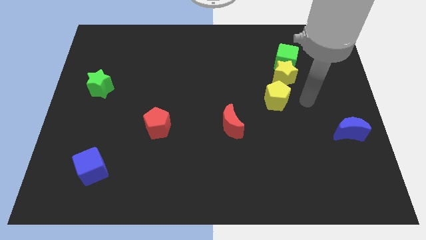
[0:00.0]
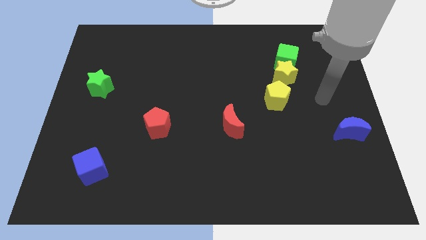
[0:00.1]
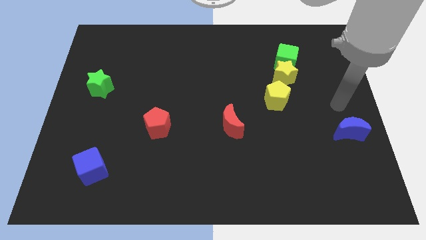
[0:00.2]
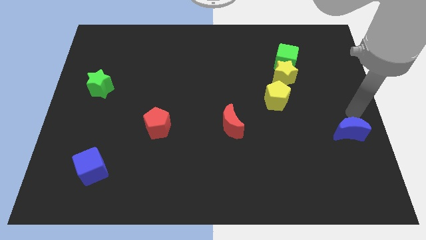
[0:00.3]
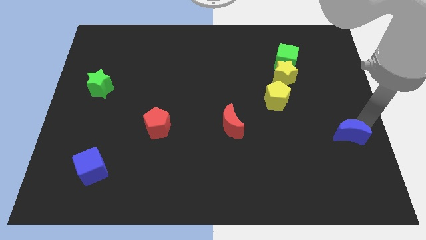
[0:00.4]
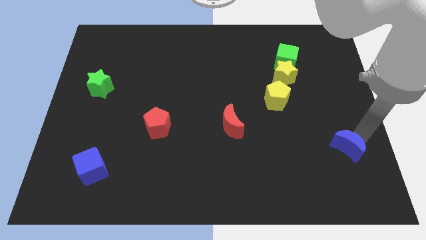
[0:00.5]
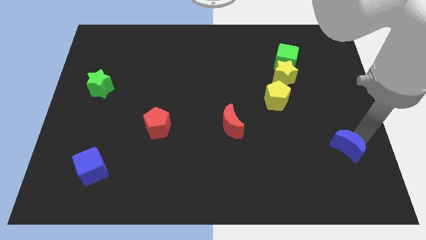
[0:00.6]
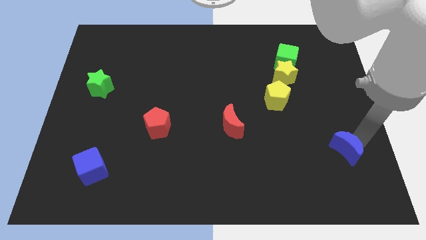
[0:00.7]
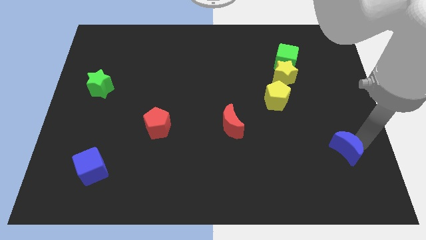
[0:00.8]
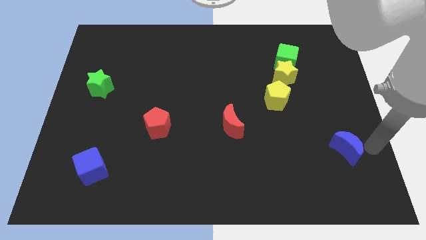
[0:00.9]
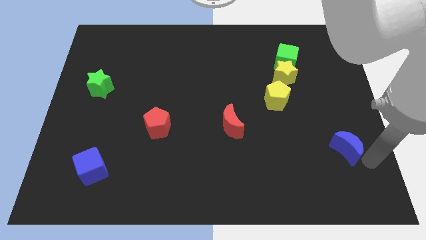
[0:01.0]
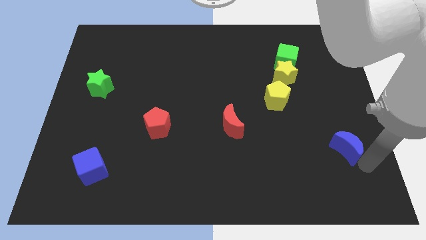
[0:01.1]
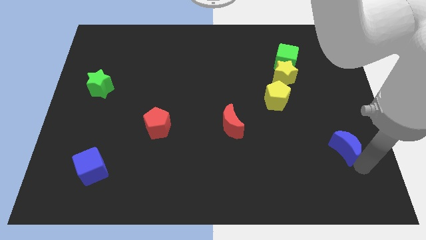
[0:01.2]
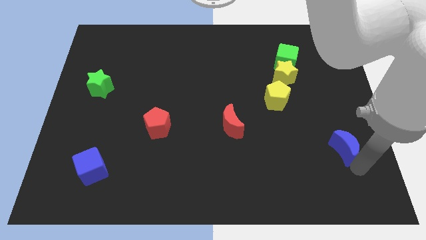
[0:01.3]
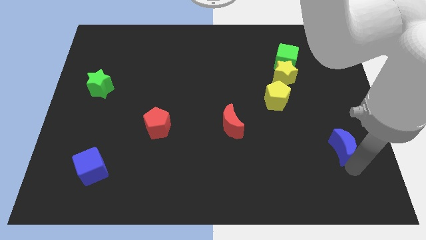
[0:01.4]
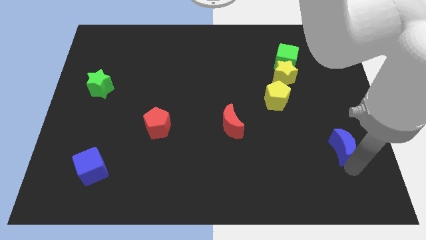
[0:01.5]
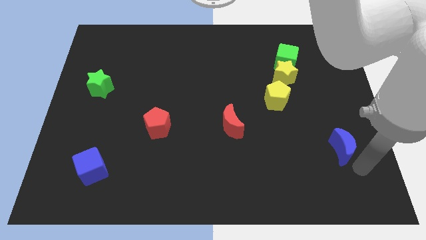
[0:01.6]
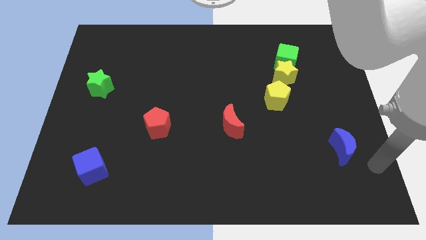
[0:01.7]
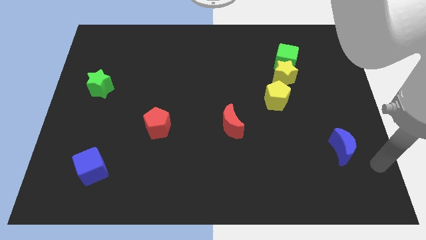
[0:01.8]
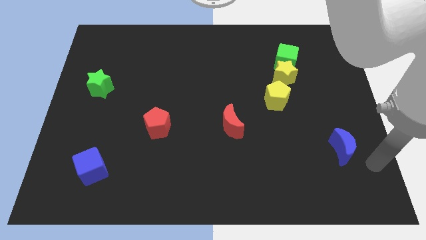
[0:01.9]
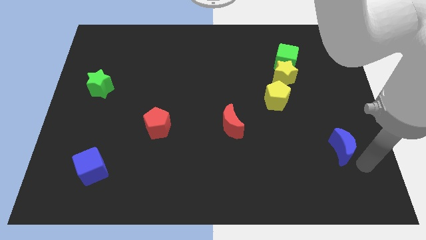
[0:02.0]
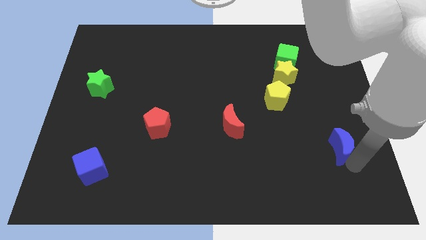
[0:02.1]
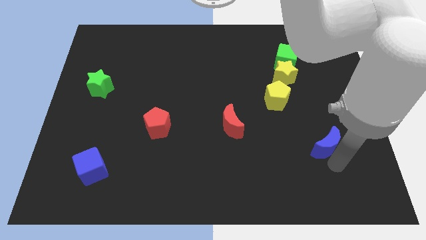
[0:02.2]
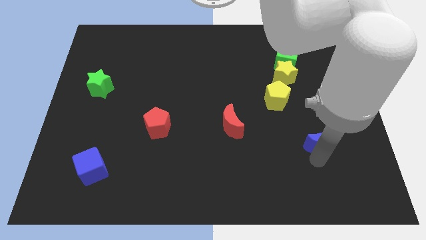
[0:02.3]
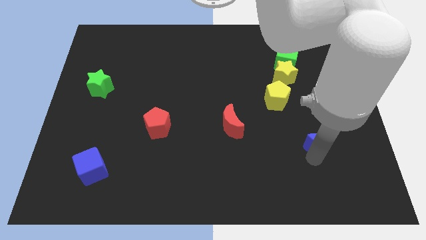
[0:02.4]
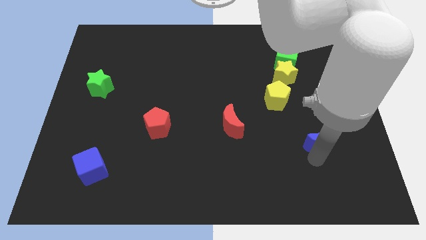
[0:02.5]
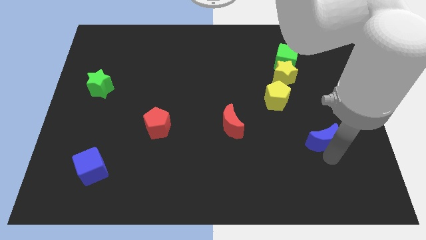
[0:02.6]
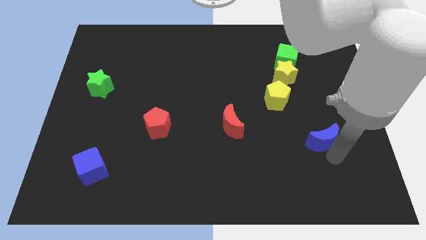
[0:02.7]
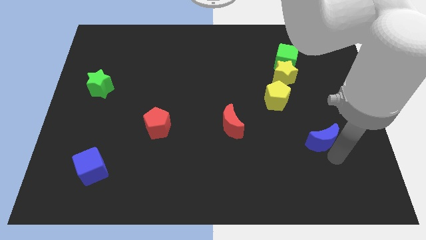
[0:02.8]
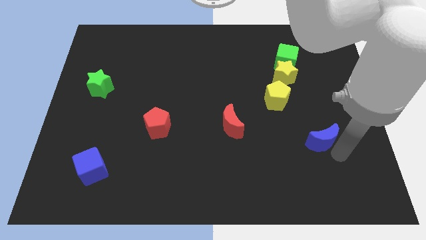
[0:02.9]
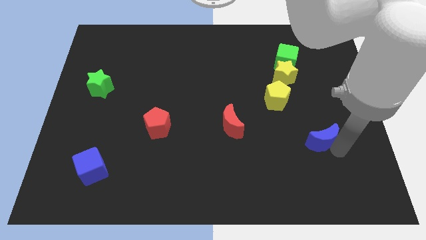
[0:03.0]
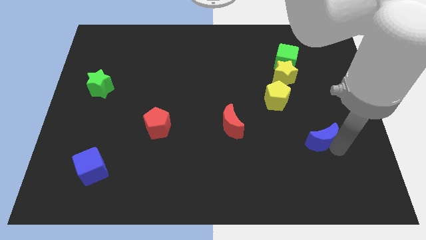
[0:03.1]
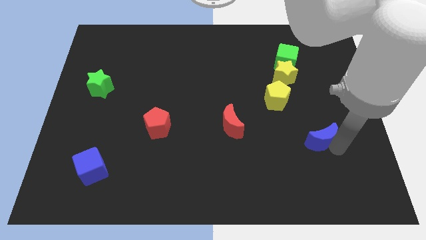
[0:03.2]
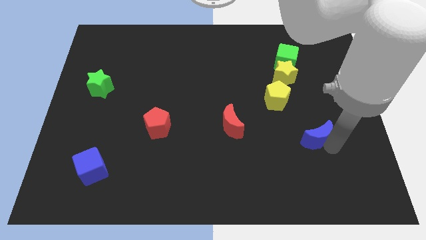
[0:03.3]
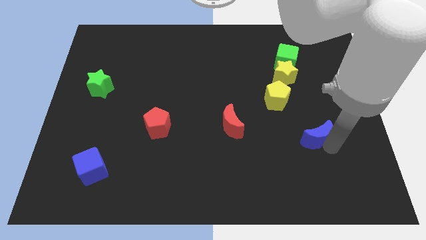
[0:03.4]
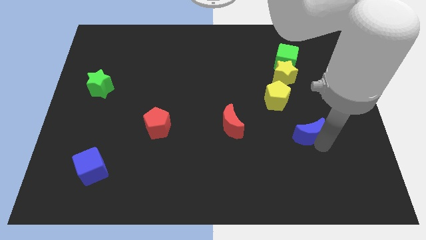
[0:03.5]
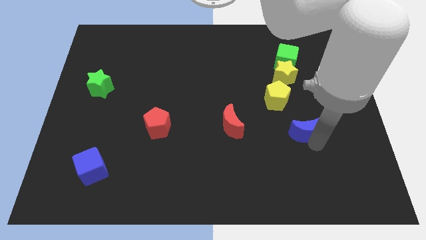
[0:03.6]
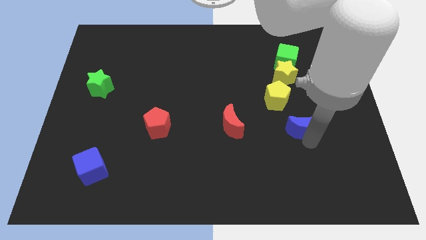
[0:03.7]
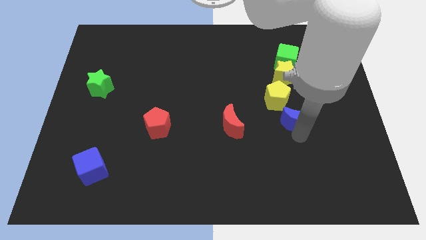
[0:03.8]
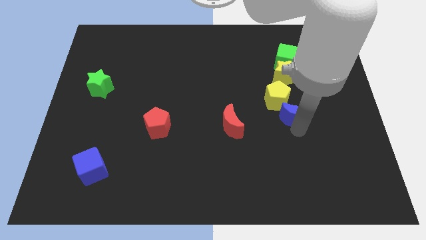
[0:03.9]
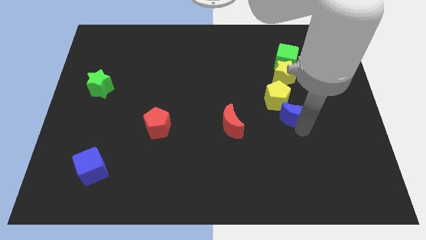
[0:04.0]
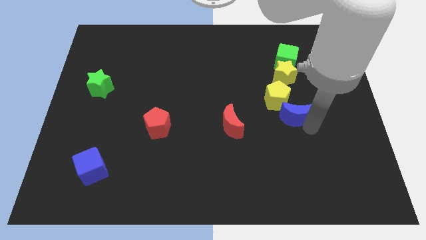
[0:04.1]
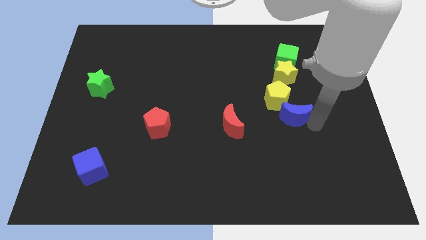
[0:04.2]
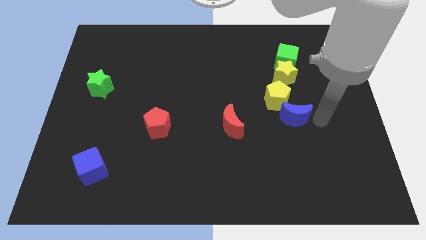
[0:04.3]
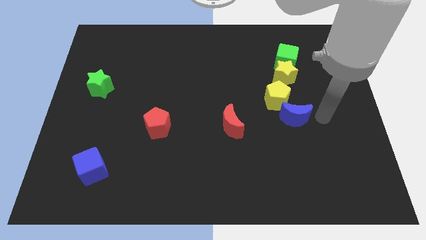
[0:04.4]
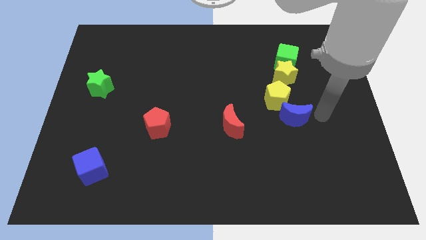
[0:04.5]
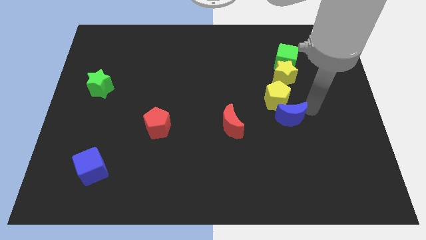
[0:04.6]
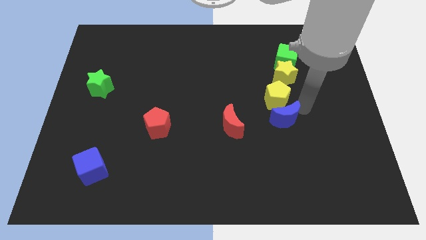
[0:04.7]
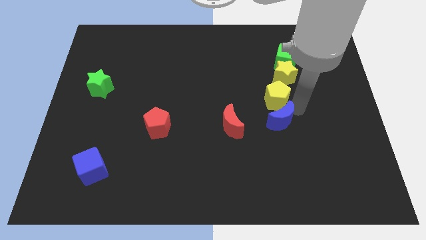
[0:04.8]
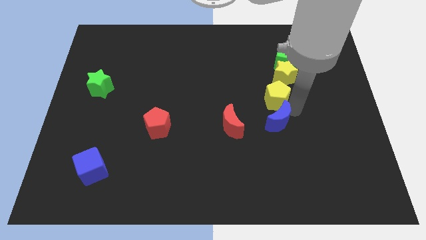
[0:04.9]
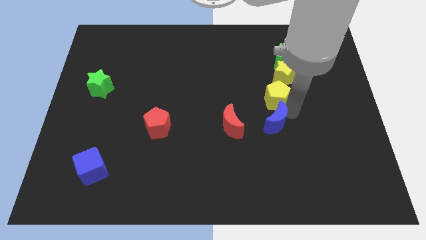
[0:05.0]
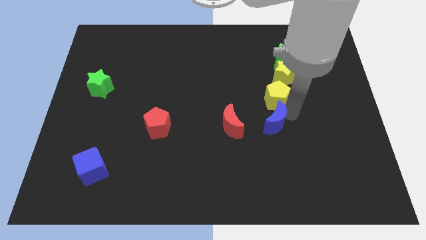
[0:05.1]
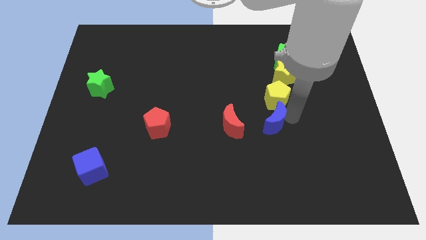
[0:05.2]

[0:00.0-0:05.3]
place the blue crescent below the yellow pentagon

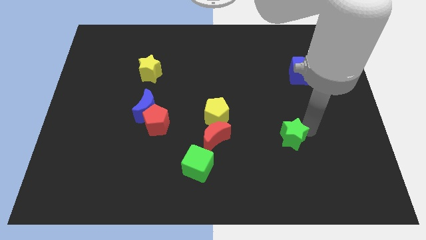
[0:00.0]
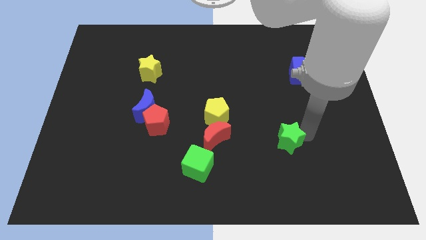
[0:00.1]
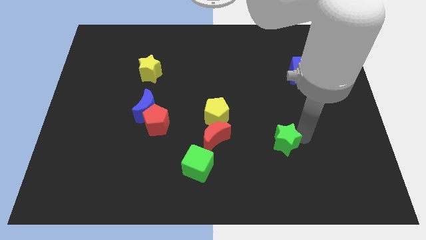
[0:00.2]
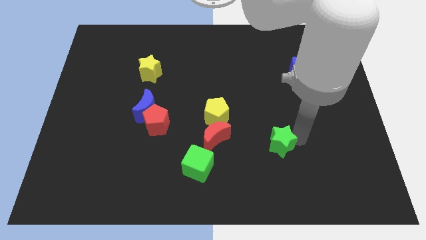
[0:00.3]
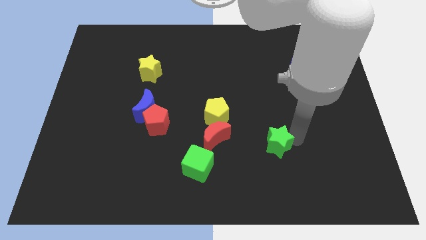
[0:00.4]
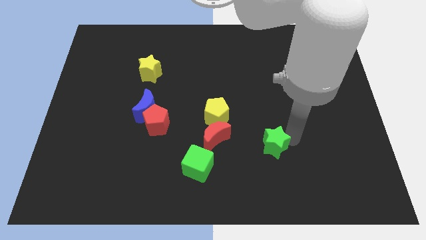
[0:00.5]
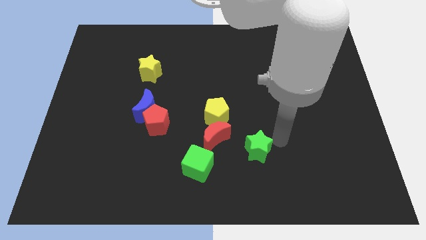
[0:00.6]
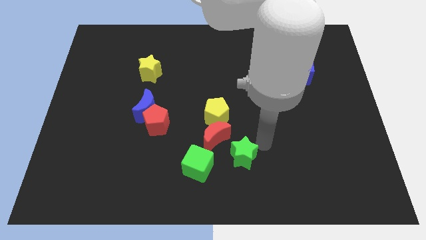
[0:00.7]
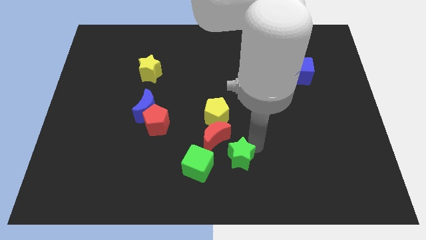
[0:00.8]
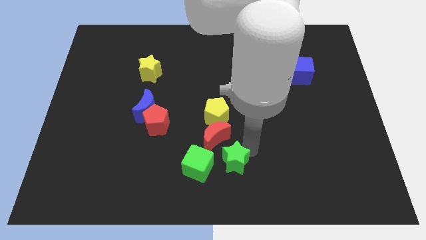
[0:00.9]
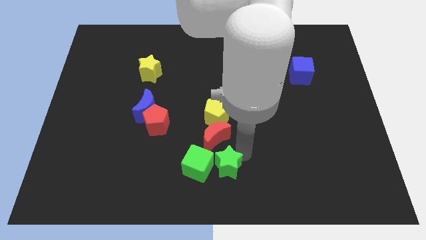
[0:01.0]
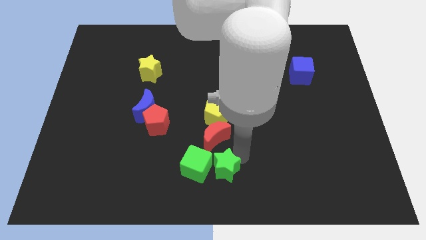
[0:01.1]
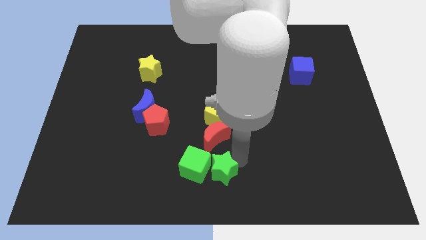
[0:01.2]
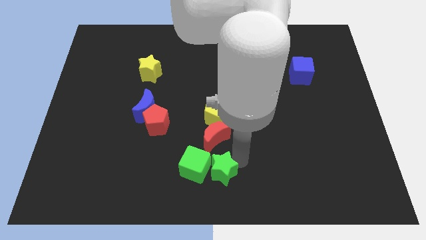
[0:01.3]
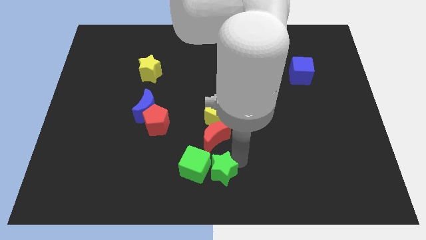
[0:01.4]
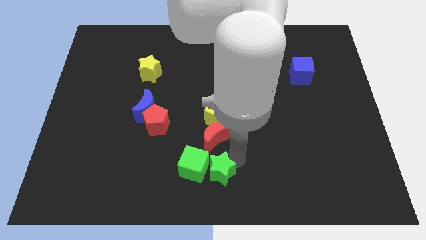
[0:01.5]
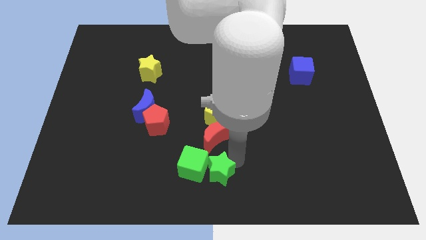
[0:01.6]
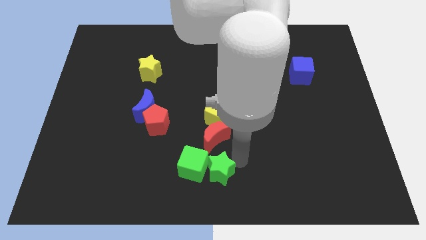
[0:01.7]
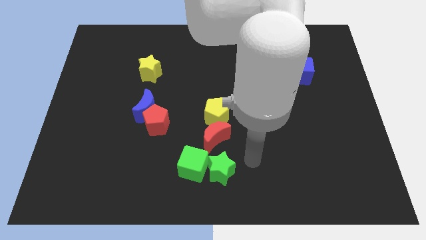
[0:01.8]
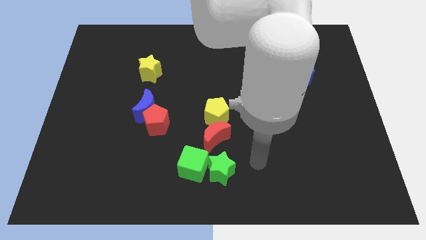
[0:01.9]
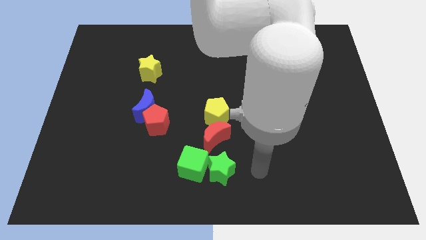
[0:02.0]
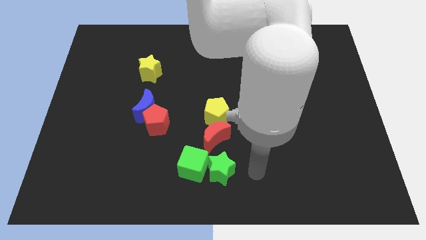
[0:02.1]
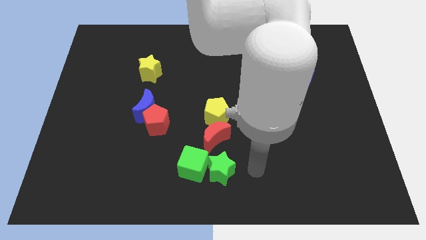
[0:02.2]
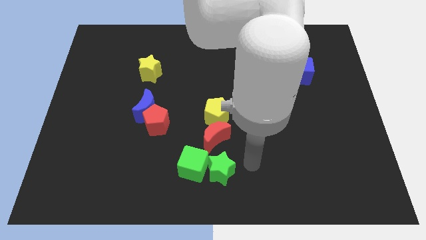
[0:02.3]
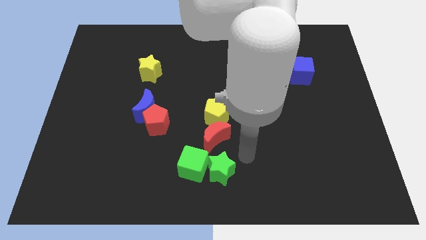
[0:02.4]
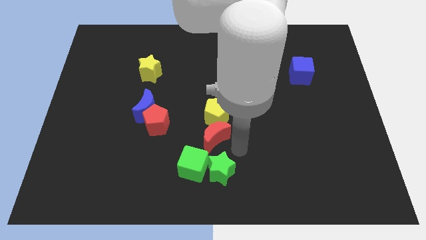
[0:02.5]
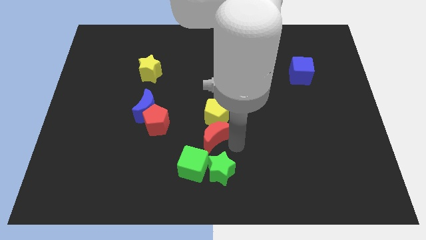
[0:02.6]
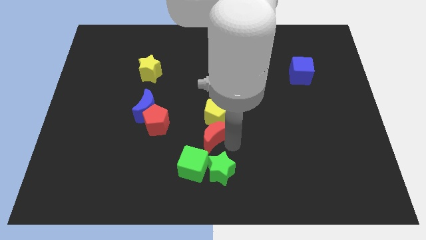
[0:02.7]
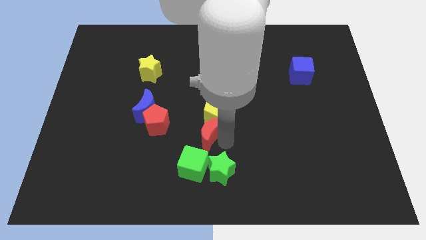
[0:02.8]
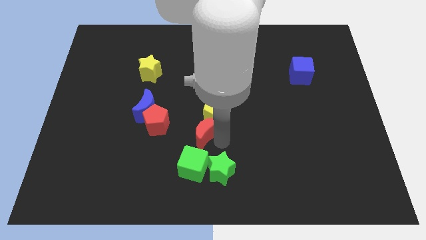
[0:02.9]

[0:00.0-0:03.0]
push the green star into green cube

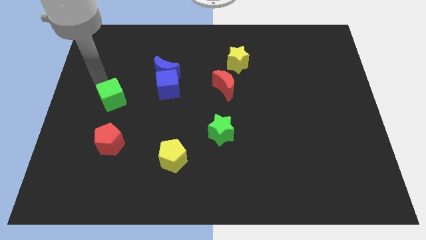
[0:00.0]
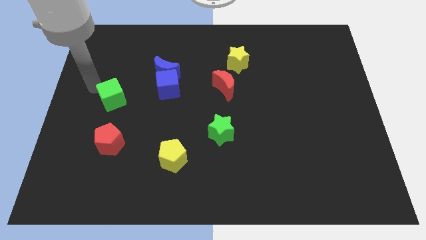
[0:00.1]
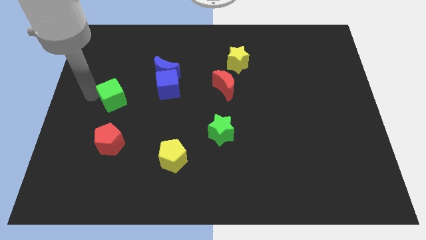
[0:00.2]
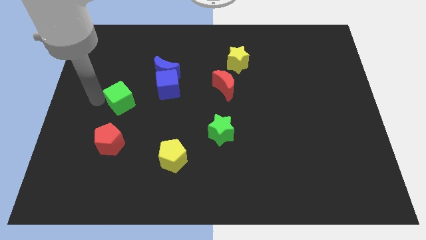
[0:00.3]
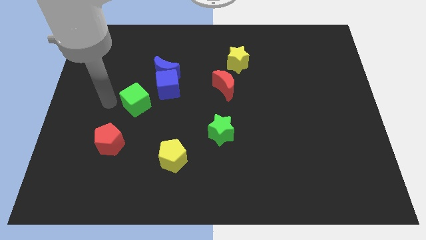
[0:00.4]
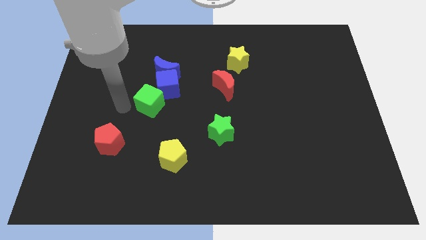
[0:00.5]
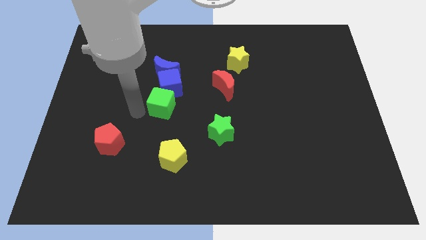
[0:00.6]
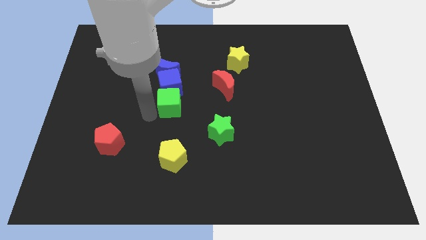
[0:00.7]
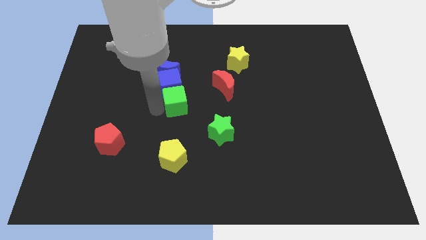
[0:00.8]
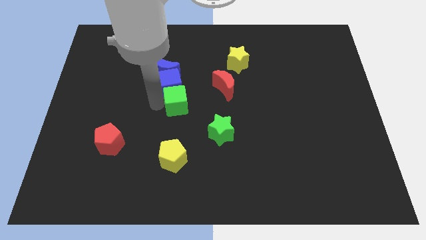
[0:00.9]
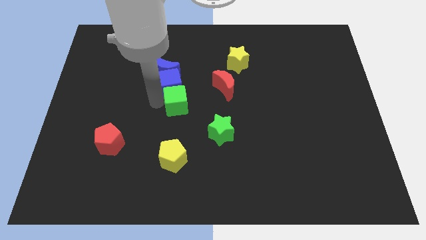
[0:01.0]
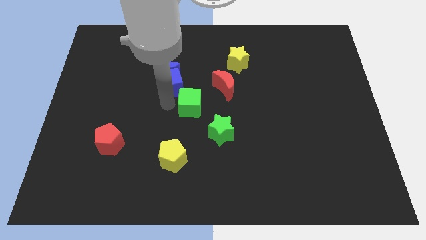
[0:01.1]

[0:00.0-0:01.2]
place the green cube below the blue cube to form a diagnoal line
